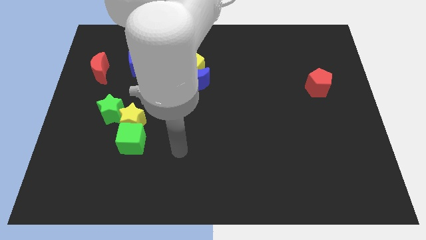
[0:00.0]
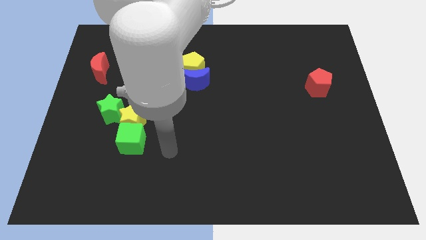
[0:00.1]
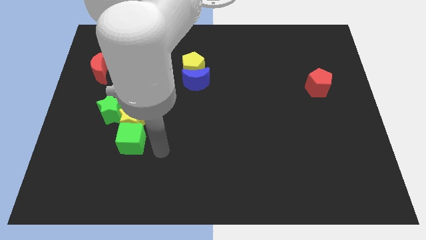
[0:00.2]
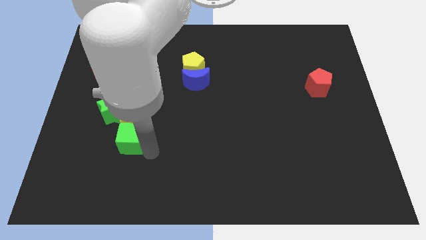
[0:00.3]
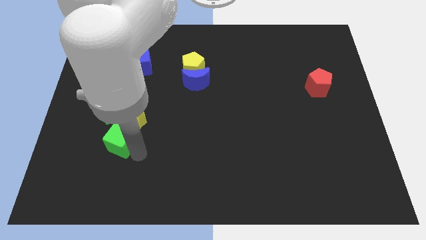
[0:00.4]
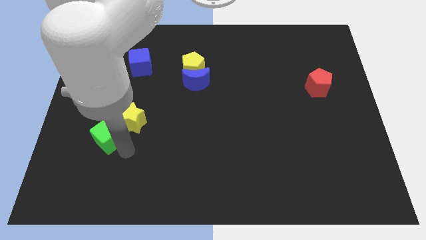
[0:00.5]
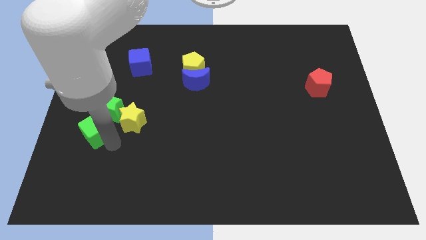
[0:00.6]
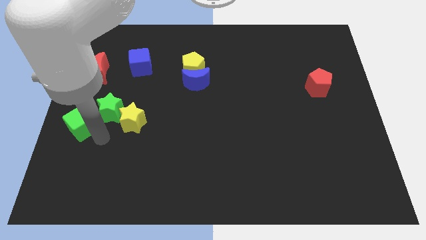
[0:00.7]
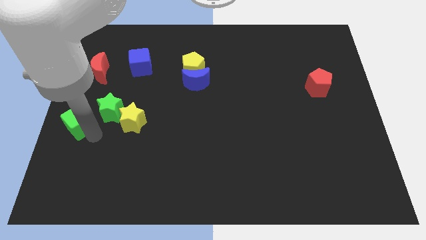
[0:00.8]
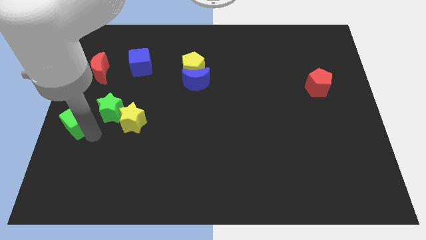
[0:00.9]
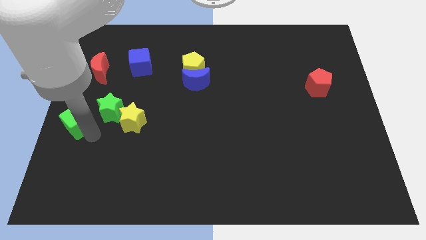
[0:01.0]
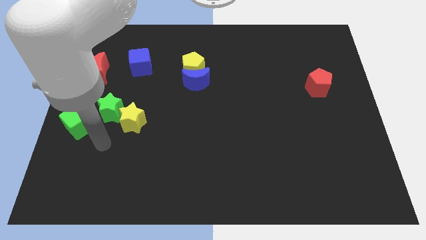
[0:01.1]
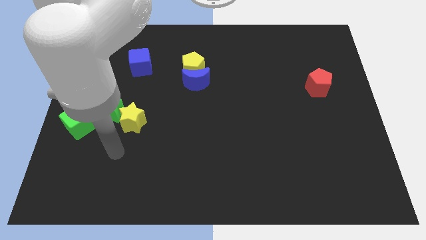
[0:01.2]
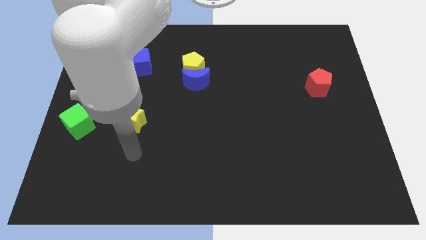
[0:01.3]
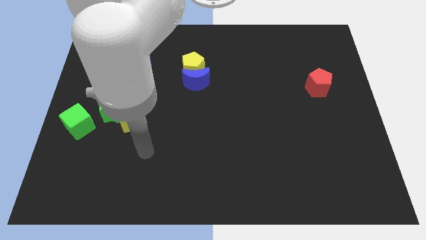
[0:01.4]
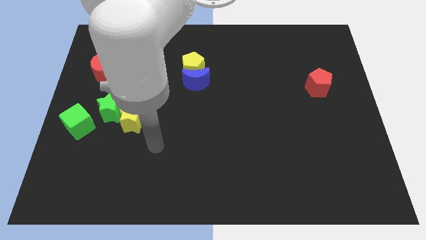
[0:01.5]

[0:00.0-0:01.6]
place the green cube diagonally at the bottom left of the green star

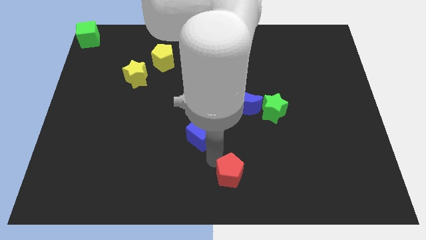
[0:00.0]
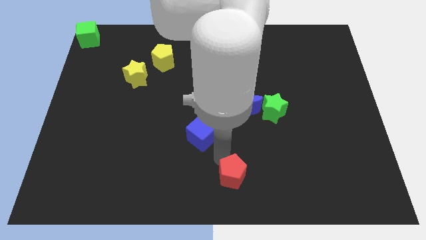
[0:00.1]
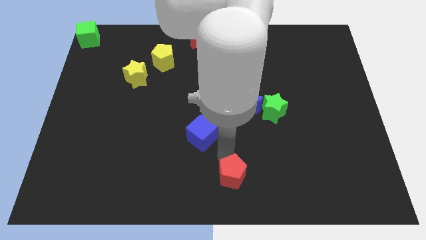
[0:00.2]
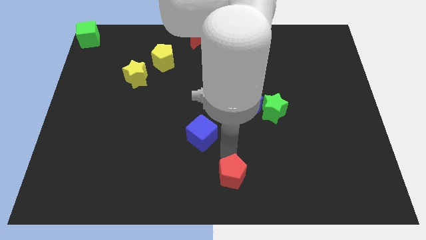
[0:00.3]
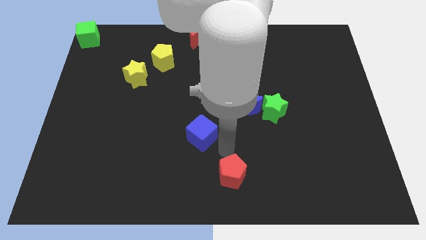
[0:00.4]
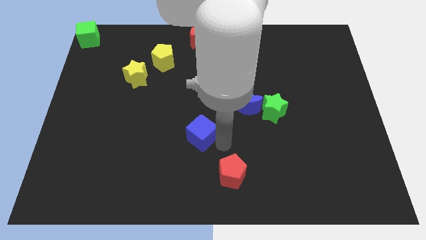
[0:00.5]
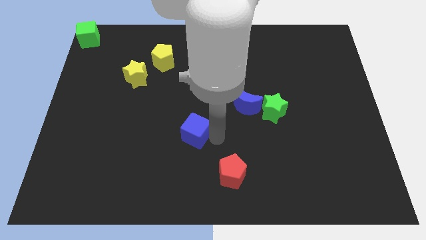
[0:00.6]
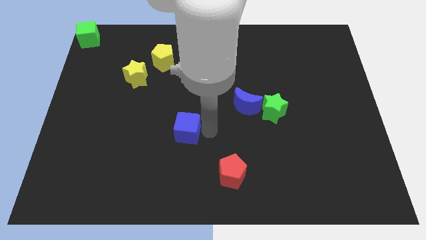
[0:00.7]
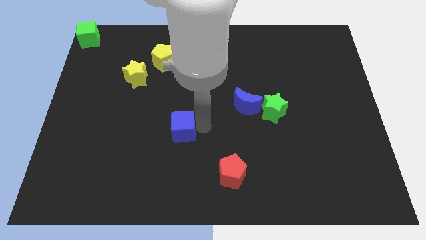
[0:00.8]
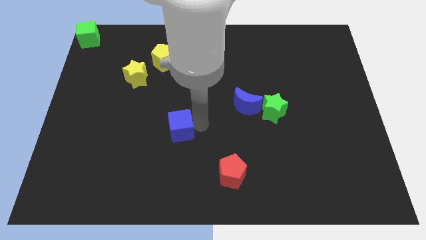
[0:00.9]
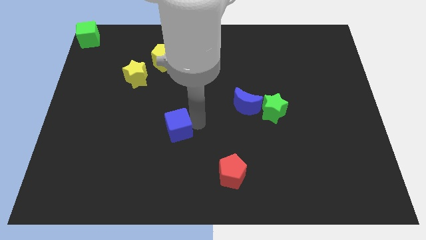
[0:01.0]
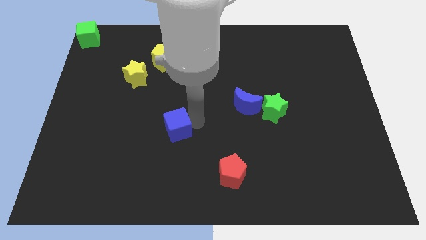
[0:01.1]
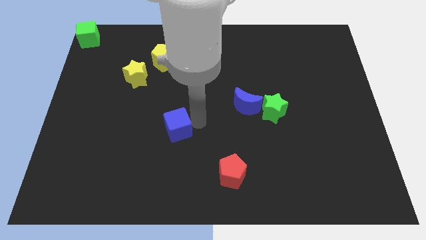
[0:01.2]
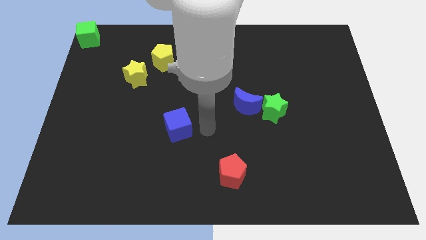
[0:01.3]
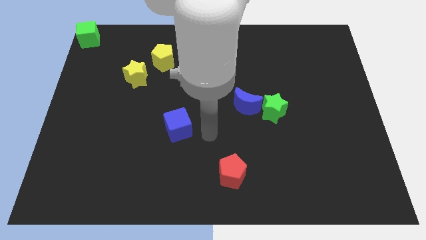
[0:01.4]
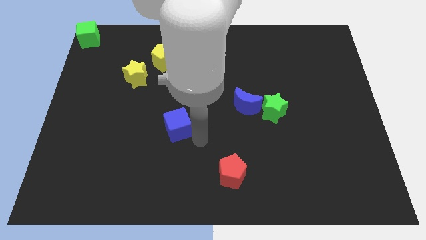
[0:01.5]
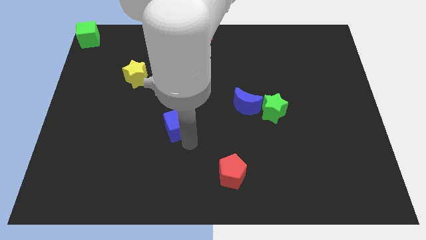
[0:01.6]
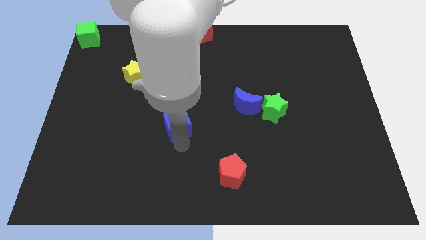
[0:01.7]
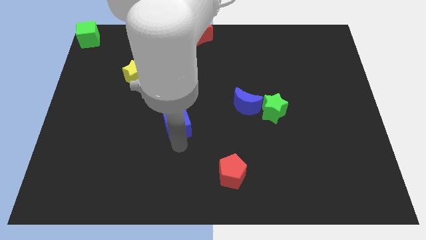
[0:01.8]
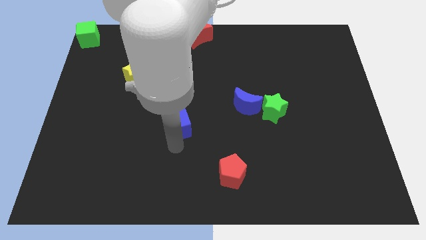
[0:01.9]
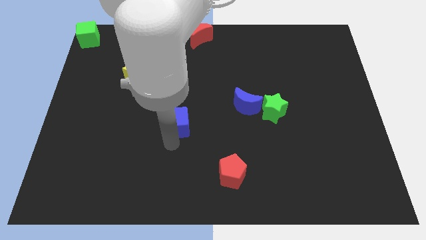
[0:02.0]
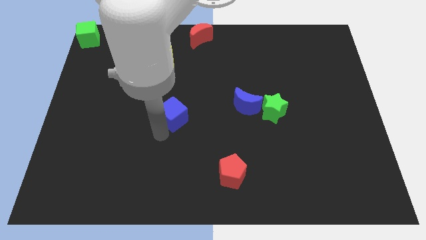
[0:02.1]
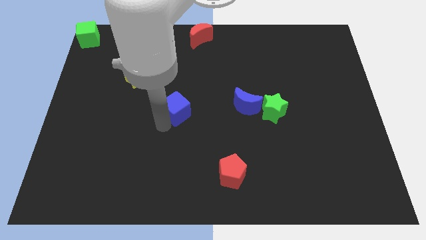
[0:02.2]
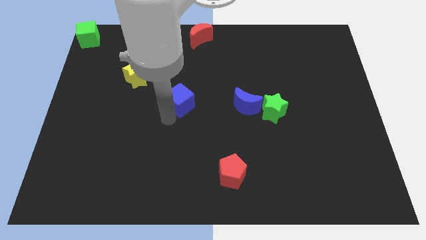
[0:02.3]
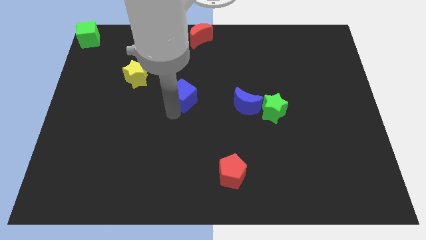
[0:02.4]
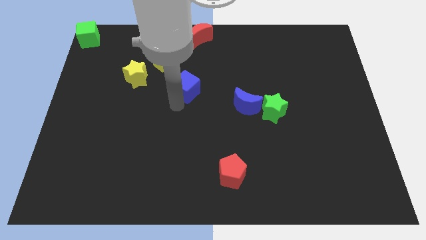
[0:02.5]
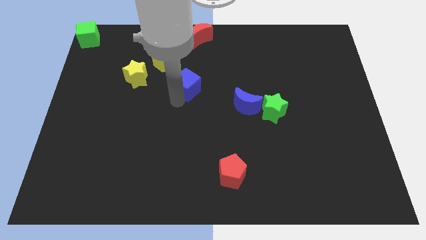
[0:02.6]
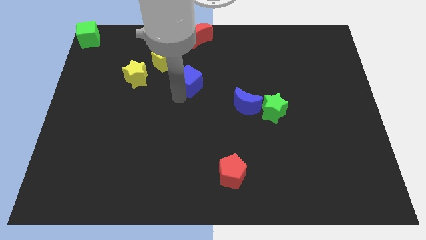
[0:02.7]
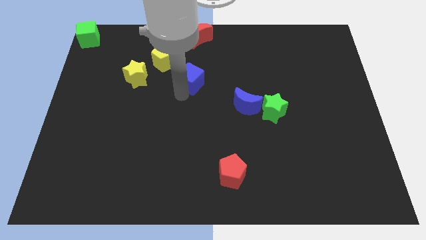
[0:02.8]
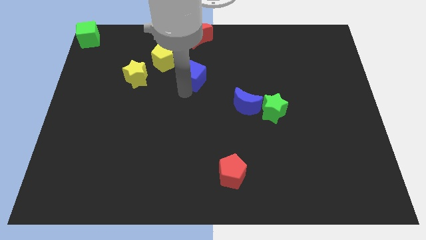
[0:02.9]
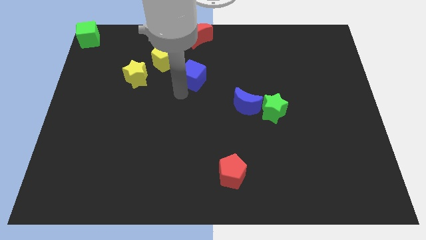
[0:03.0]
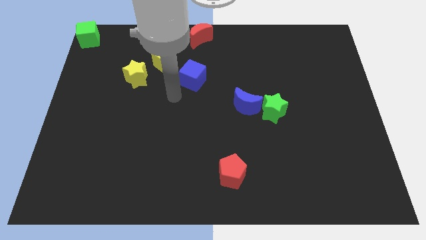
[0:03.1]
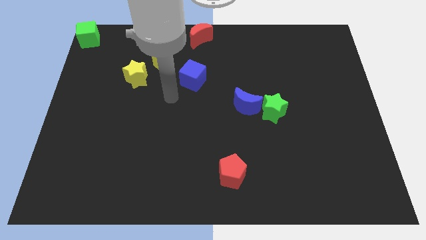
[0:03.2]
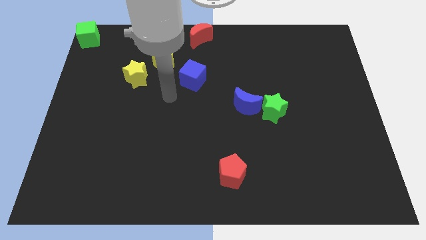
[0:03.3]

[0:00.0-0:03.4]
place the blue cube below the red moon

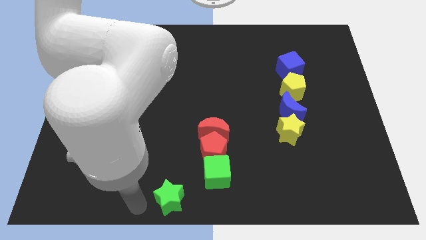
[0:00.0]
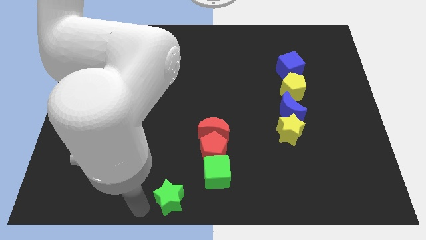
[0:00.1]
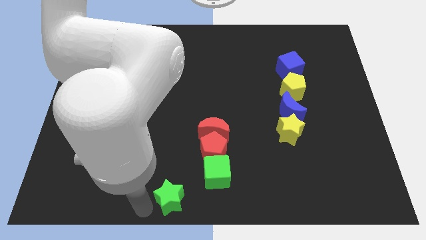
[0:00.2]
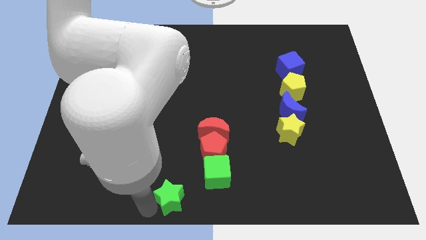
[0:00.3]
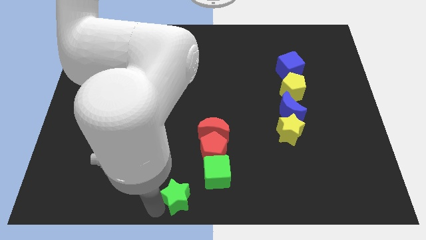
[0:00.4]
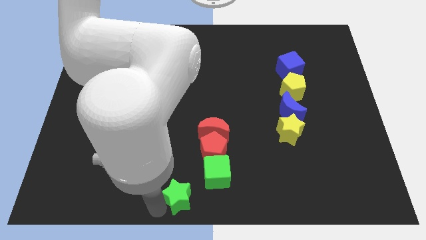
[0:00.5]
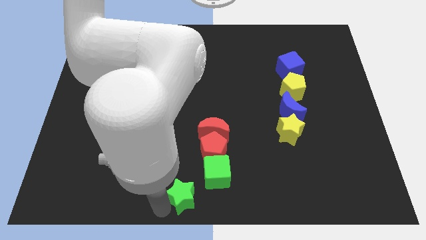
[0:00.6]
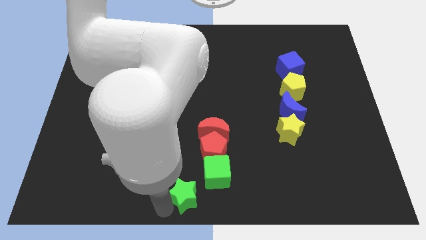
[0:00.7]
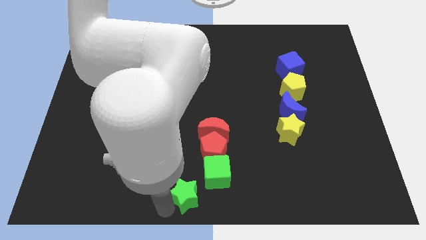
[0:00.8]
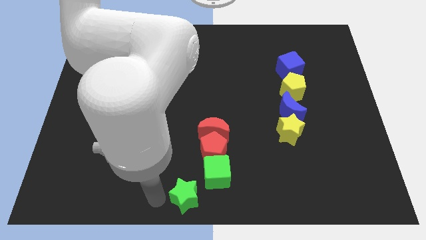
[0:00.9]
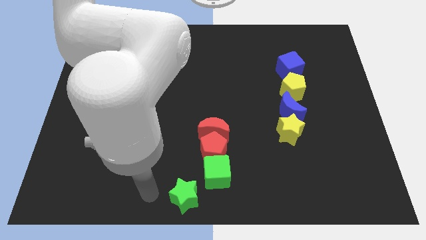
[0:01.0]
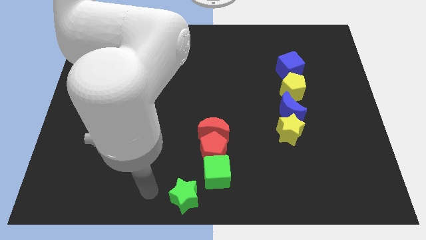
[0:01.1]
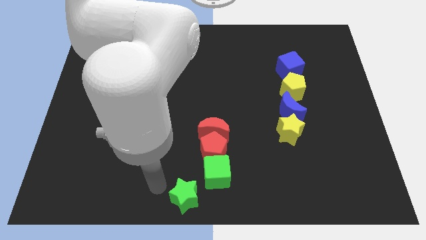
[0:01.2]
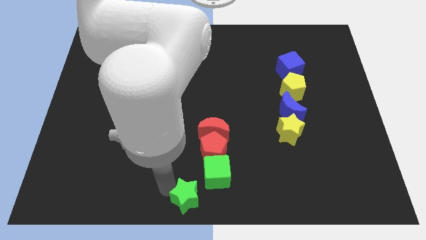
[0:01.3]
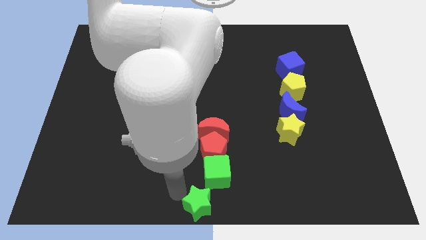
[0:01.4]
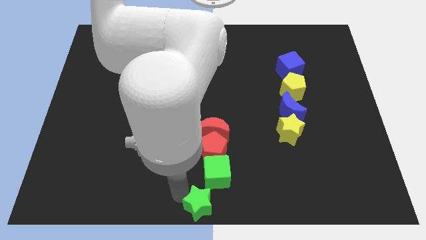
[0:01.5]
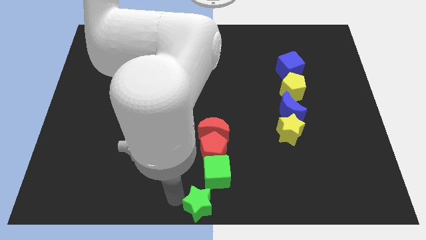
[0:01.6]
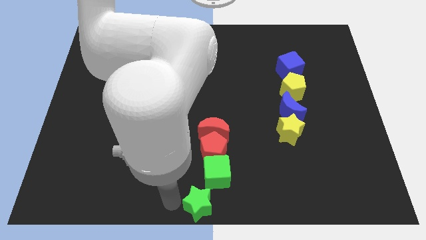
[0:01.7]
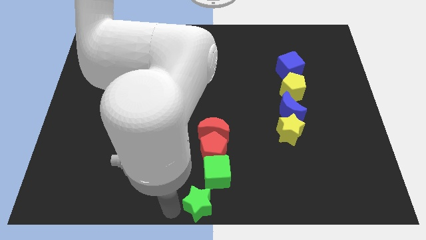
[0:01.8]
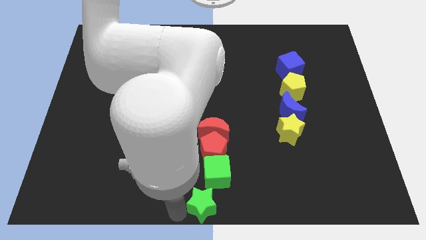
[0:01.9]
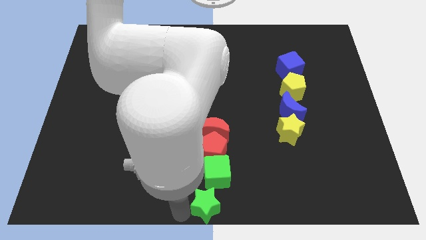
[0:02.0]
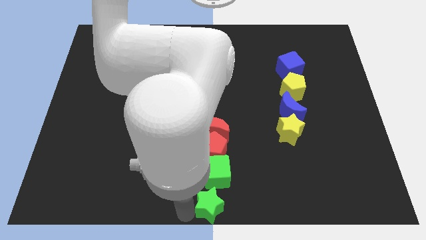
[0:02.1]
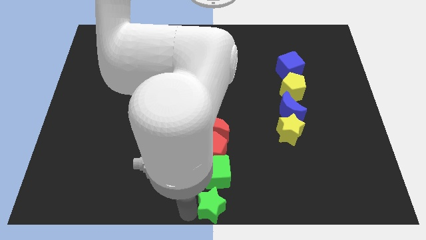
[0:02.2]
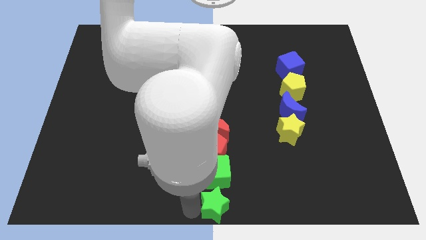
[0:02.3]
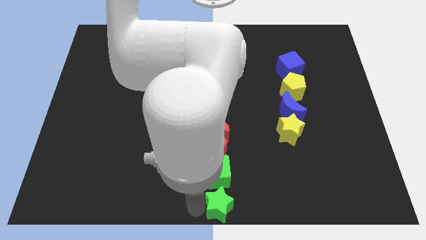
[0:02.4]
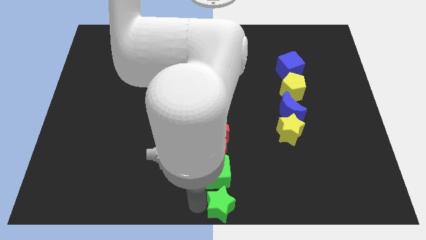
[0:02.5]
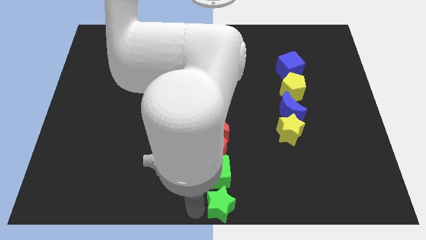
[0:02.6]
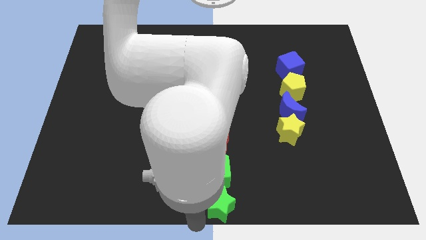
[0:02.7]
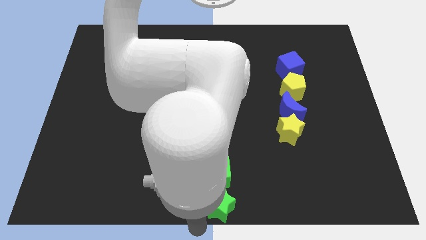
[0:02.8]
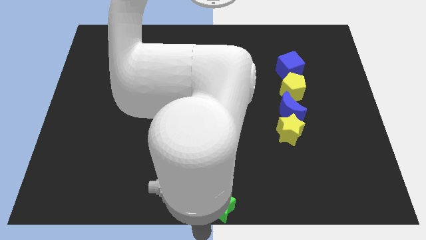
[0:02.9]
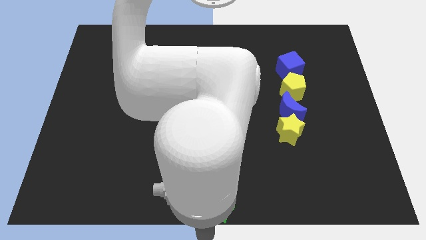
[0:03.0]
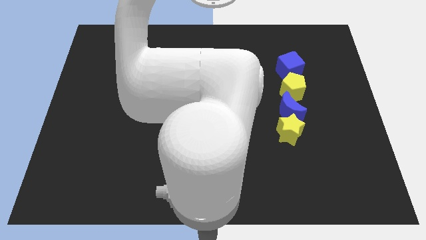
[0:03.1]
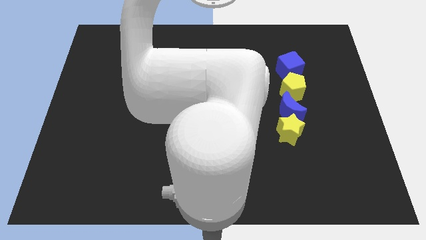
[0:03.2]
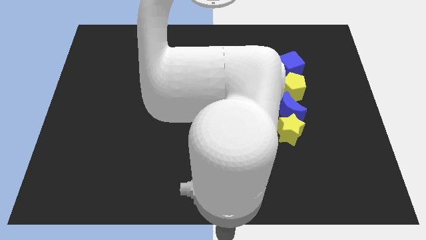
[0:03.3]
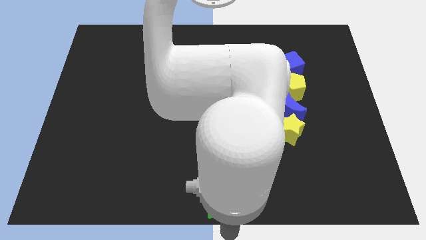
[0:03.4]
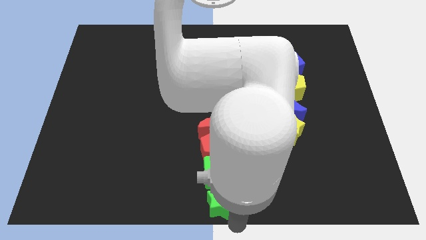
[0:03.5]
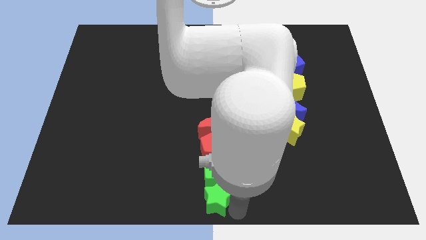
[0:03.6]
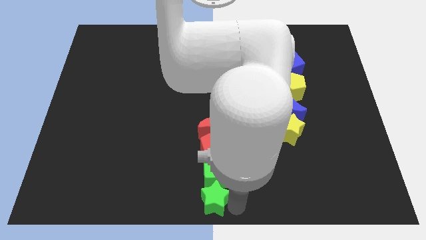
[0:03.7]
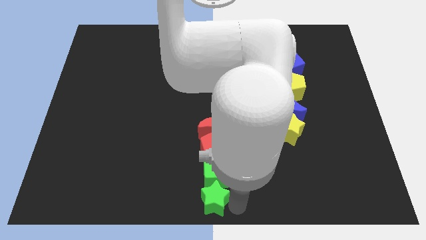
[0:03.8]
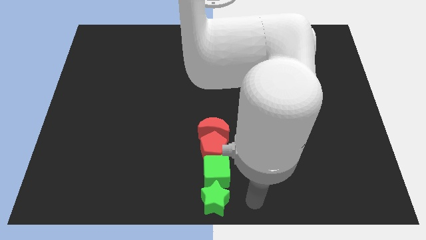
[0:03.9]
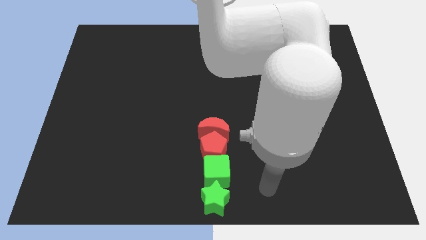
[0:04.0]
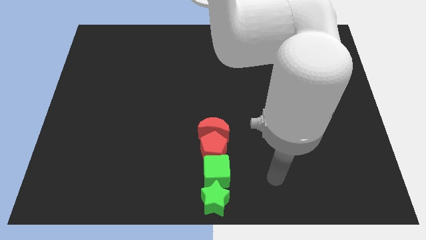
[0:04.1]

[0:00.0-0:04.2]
place the green star below the green cube
